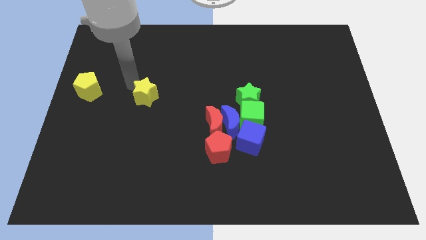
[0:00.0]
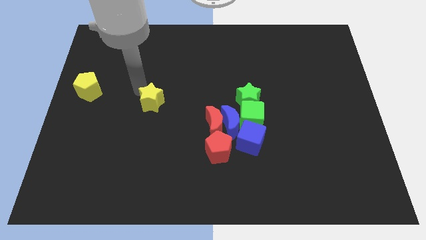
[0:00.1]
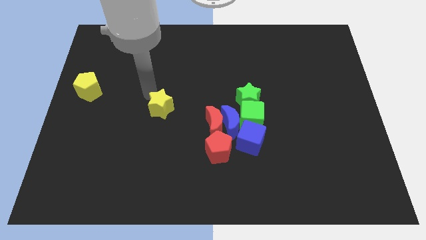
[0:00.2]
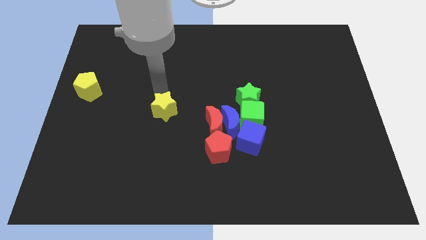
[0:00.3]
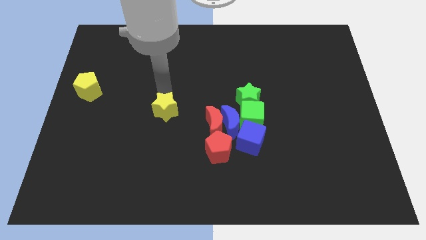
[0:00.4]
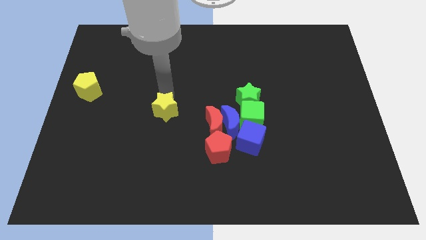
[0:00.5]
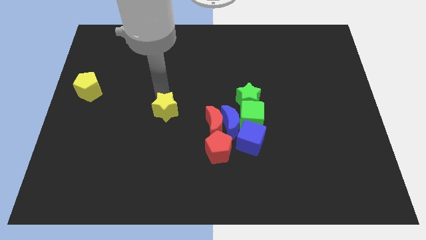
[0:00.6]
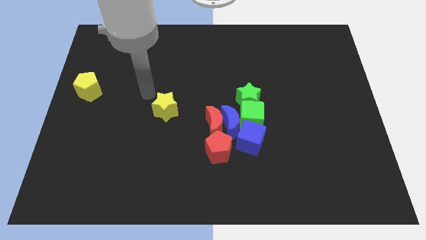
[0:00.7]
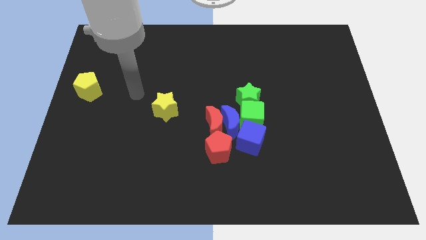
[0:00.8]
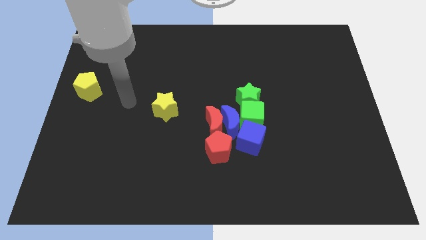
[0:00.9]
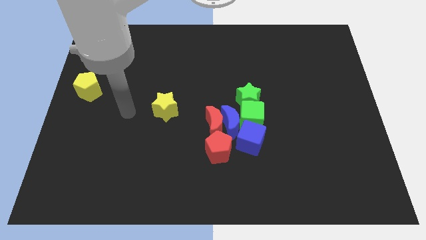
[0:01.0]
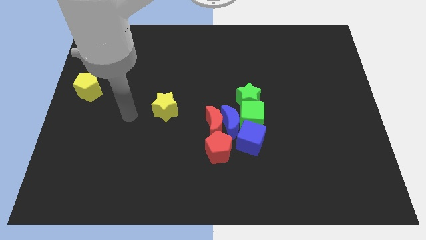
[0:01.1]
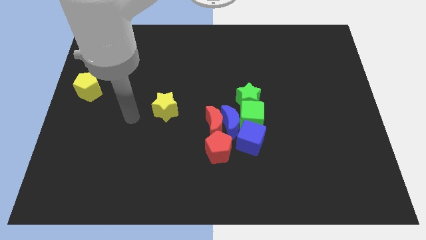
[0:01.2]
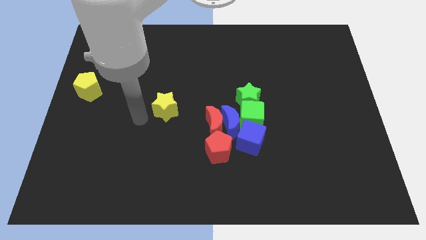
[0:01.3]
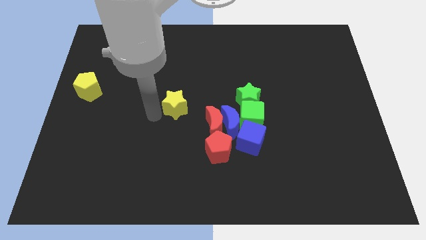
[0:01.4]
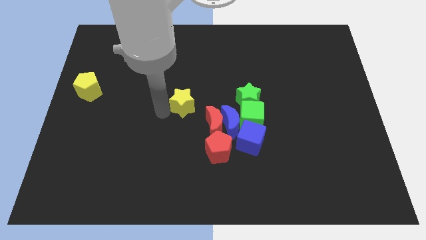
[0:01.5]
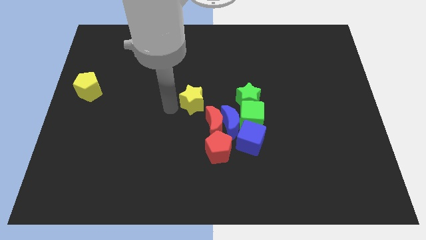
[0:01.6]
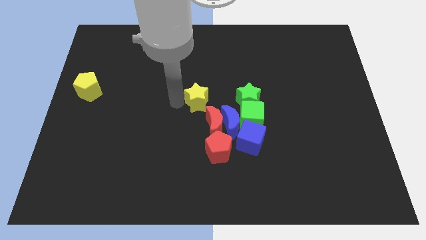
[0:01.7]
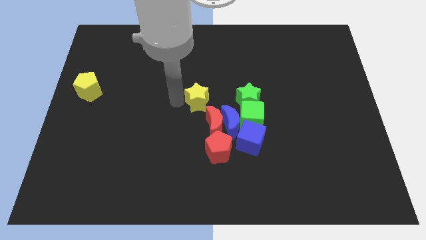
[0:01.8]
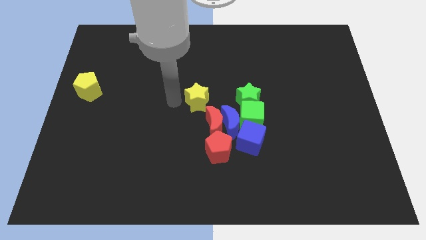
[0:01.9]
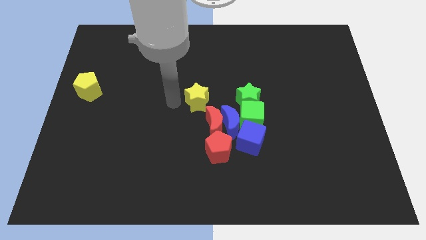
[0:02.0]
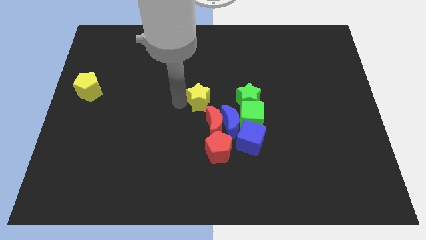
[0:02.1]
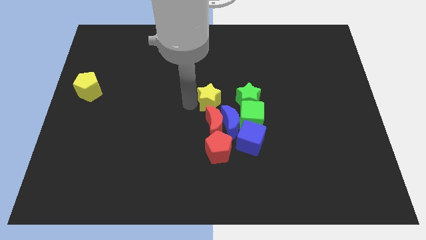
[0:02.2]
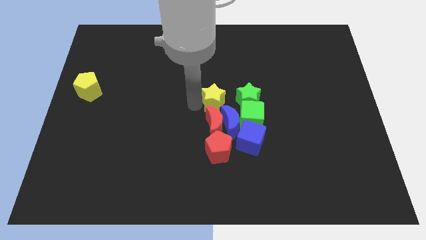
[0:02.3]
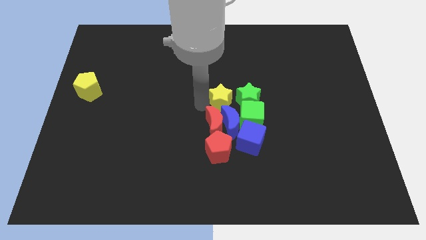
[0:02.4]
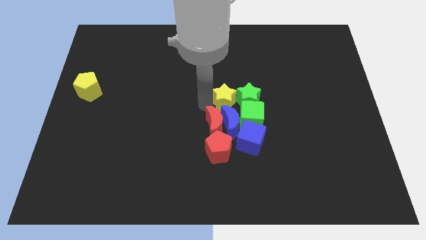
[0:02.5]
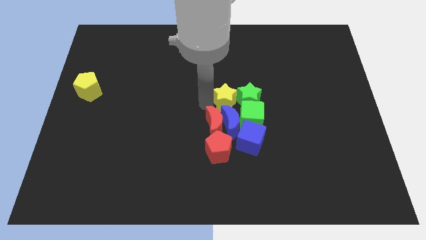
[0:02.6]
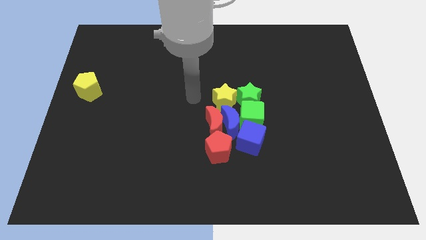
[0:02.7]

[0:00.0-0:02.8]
place the yellow star left to the green star

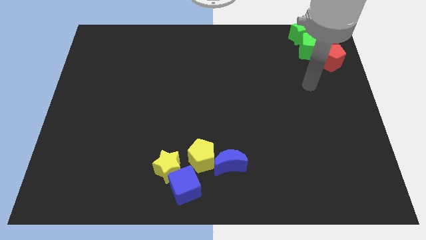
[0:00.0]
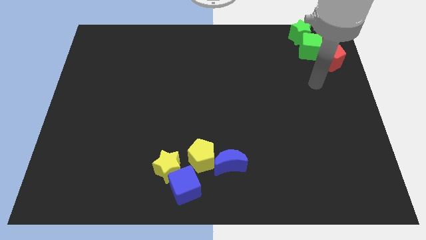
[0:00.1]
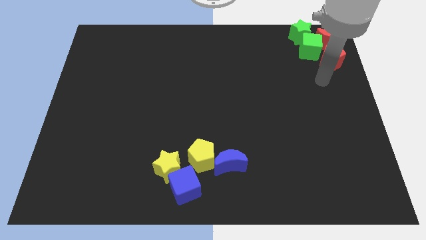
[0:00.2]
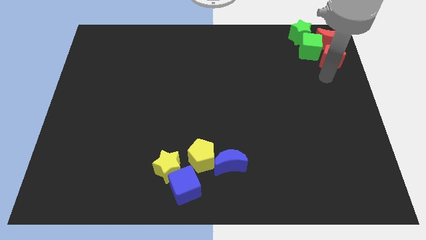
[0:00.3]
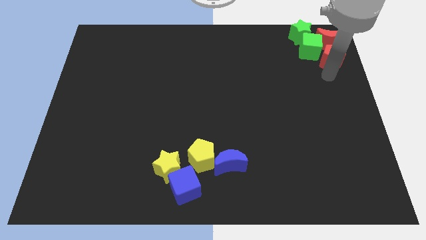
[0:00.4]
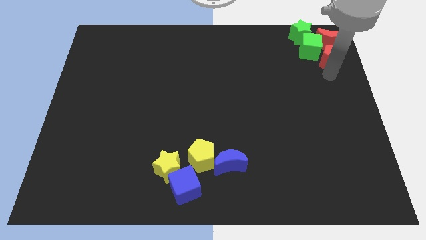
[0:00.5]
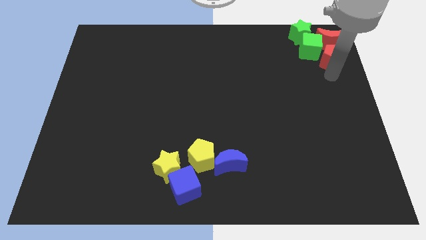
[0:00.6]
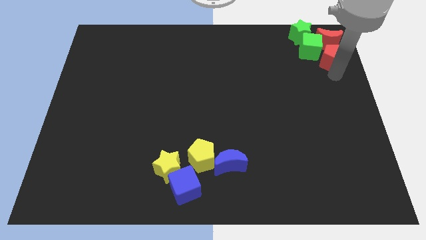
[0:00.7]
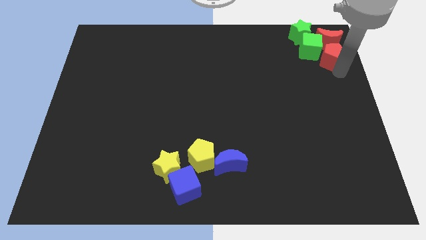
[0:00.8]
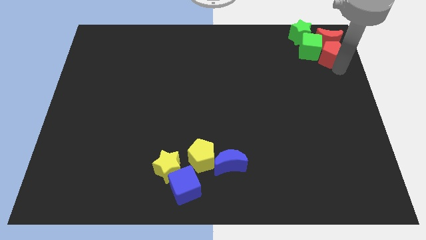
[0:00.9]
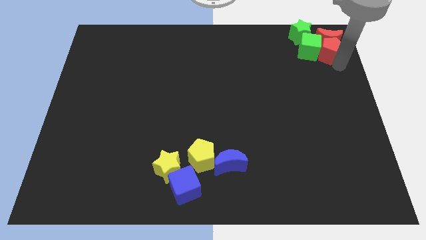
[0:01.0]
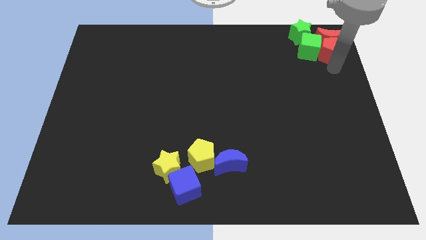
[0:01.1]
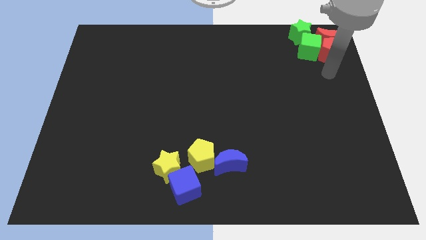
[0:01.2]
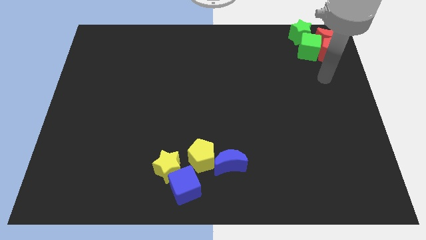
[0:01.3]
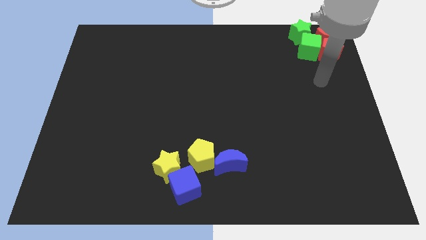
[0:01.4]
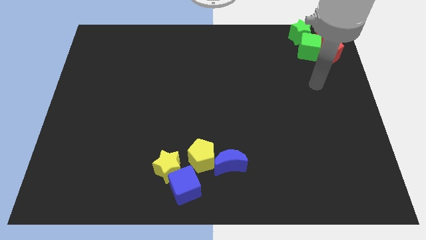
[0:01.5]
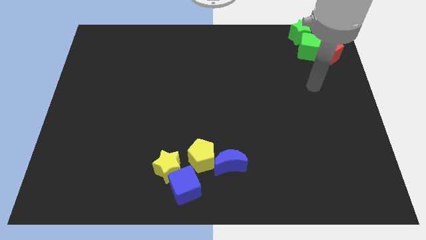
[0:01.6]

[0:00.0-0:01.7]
push the red pentagon into the red moon

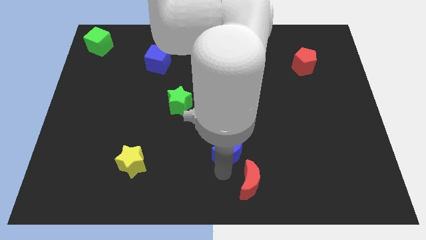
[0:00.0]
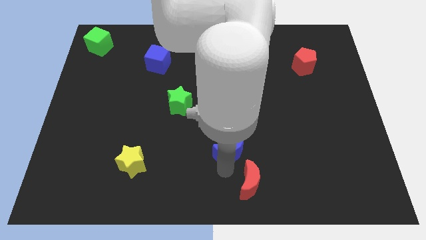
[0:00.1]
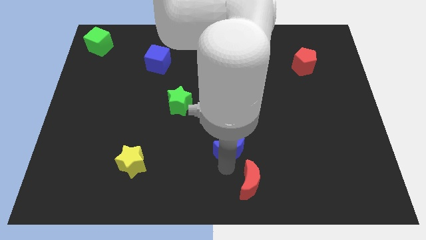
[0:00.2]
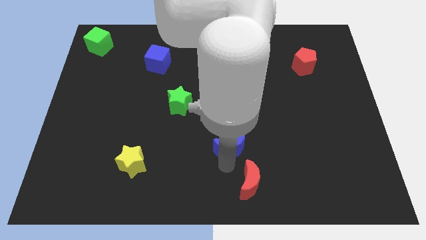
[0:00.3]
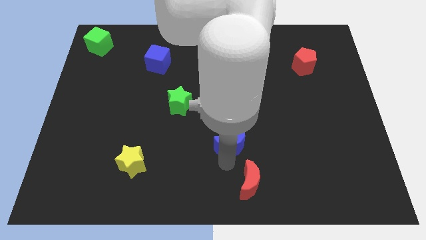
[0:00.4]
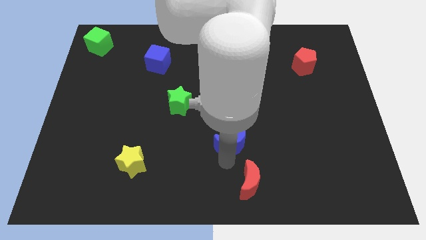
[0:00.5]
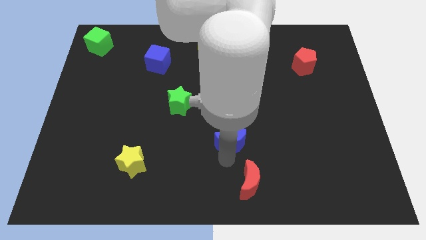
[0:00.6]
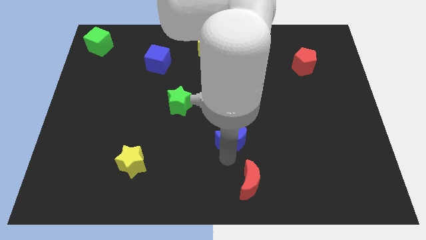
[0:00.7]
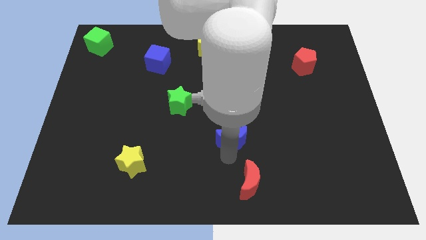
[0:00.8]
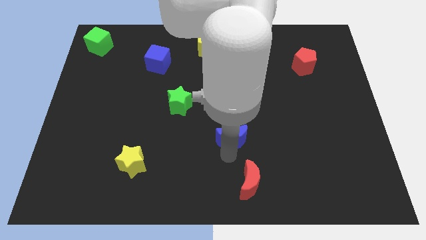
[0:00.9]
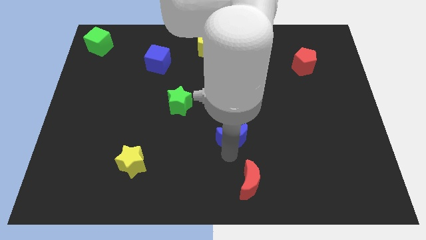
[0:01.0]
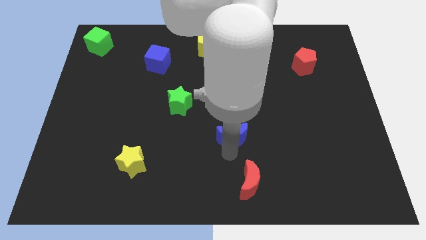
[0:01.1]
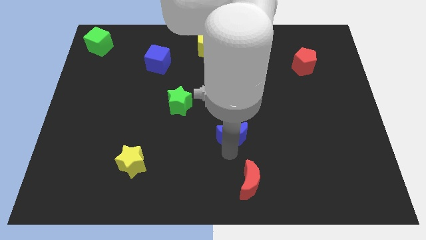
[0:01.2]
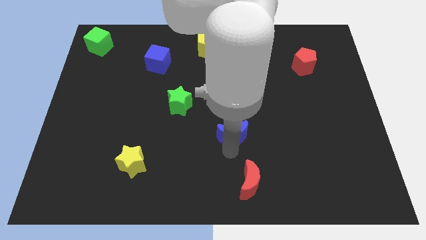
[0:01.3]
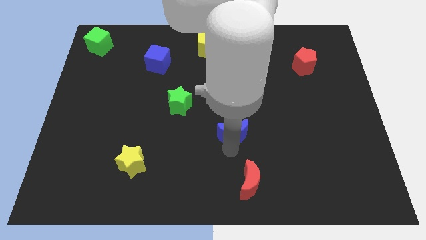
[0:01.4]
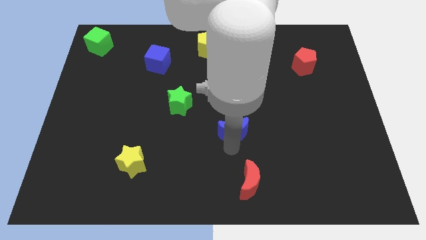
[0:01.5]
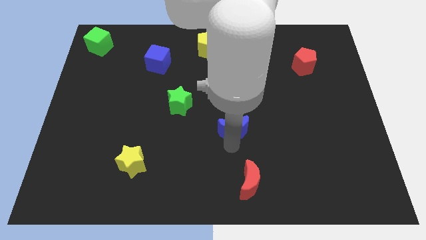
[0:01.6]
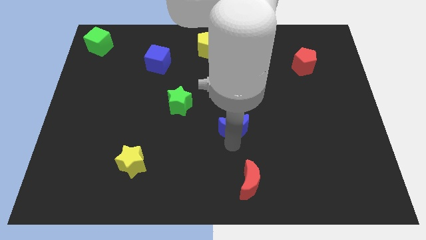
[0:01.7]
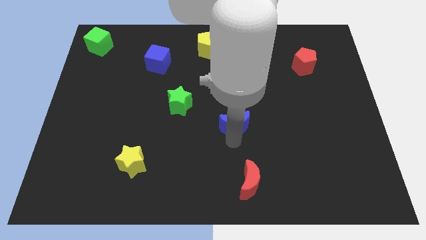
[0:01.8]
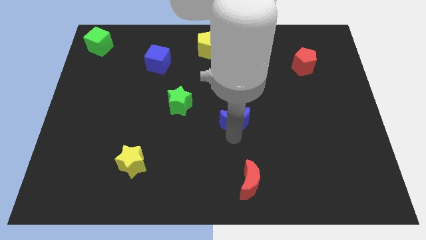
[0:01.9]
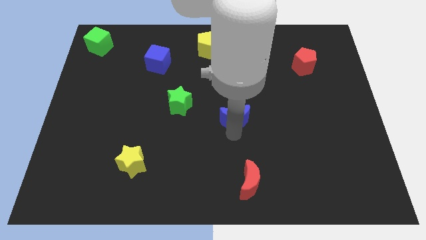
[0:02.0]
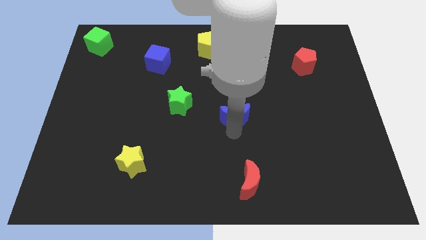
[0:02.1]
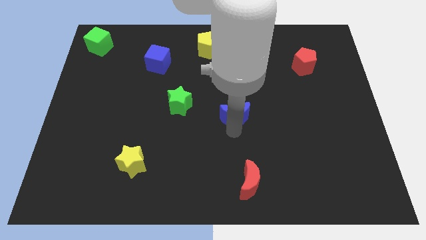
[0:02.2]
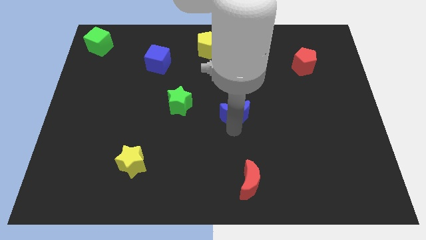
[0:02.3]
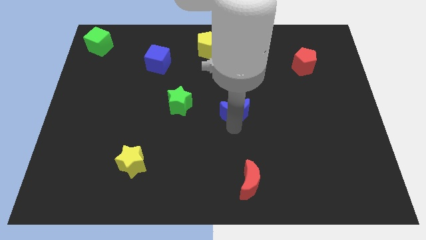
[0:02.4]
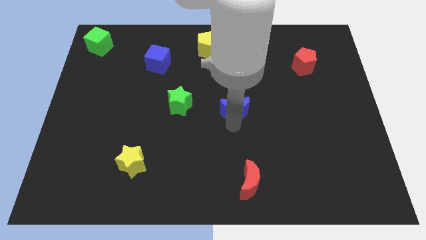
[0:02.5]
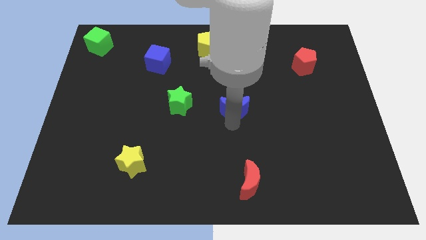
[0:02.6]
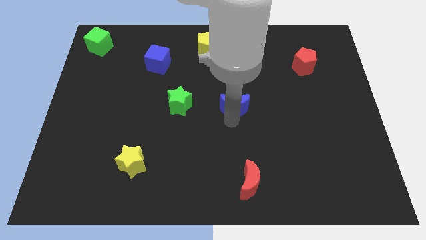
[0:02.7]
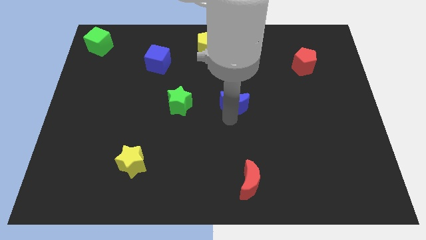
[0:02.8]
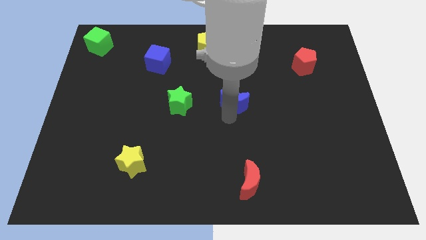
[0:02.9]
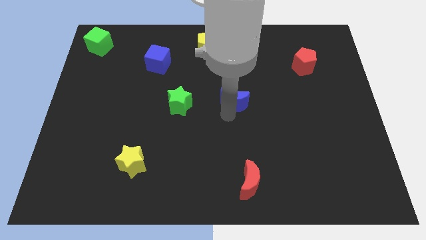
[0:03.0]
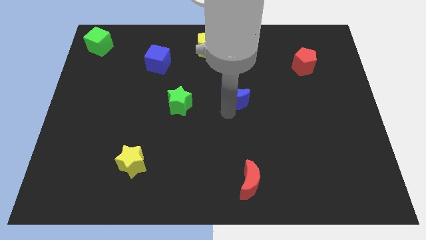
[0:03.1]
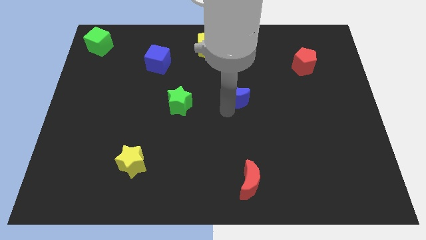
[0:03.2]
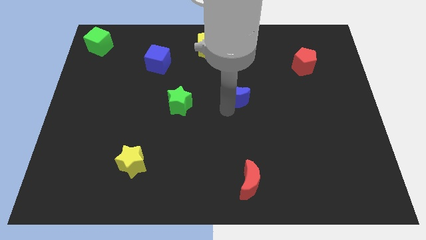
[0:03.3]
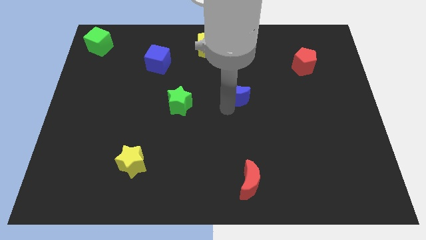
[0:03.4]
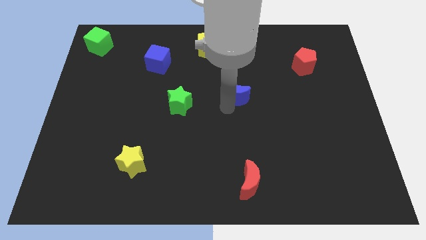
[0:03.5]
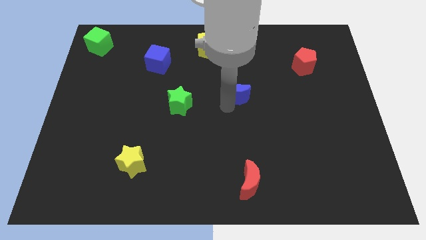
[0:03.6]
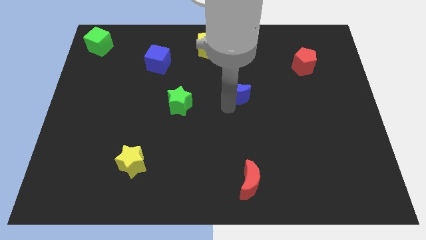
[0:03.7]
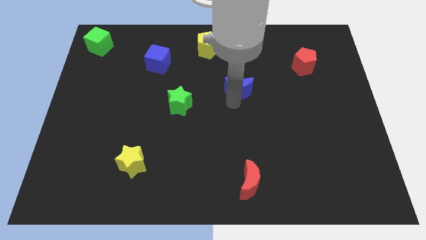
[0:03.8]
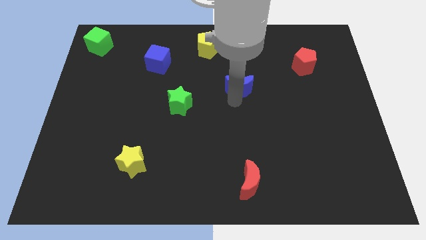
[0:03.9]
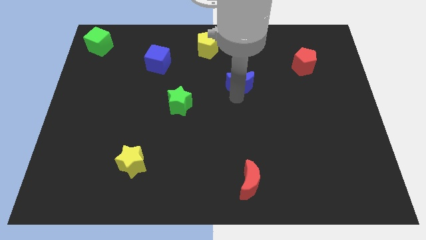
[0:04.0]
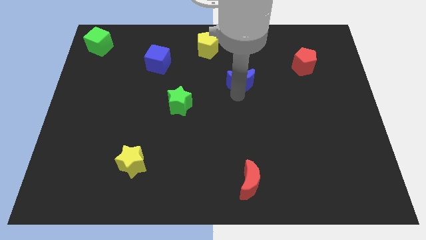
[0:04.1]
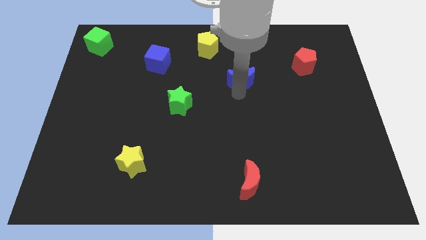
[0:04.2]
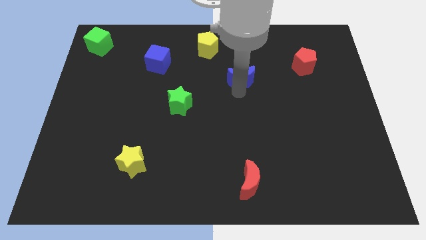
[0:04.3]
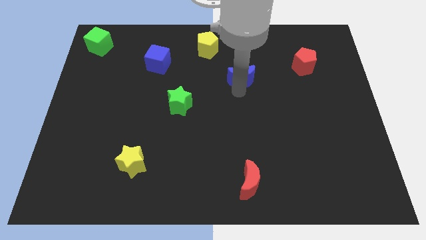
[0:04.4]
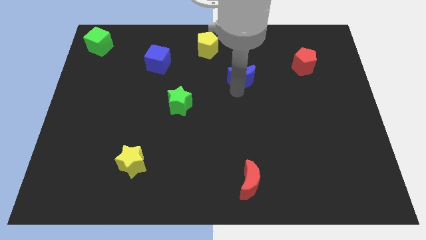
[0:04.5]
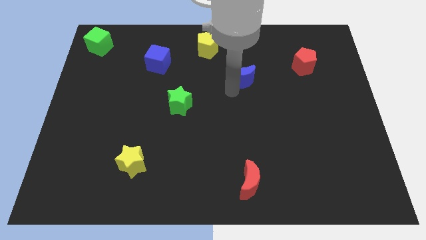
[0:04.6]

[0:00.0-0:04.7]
place the blue moon in between the red pentagon and green star
